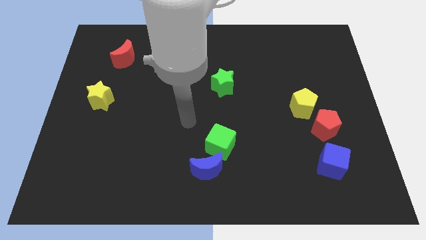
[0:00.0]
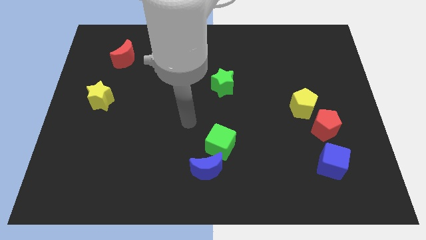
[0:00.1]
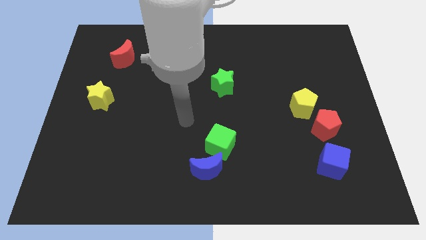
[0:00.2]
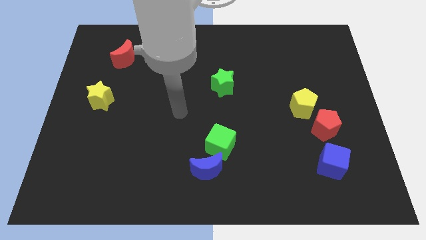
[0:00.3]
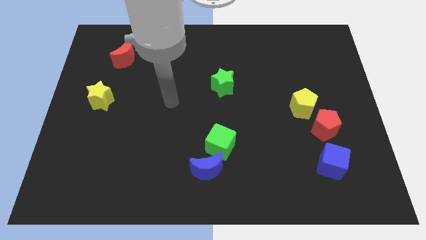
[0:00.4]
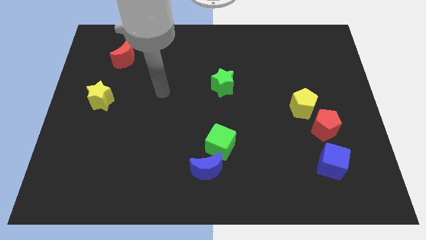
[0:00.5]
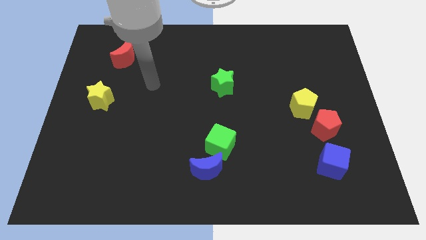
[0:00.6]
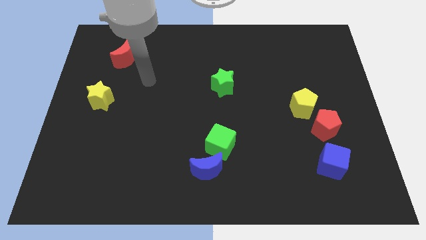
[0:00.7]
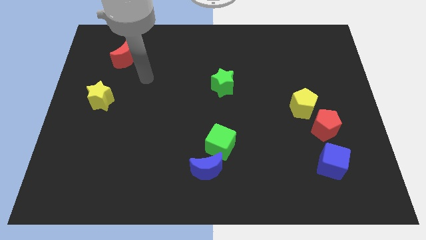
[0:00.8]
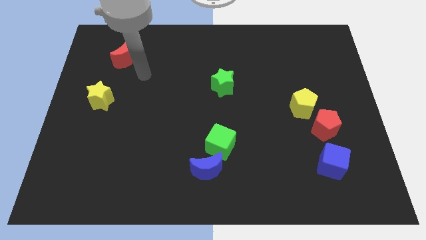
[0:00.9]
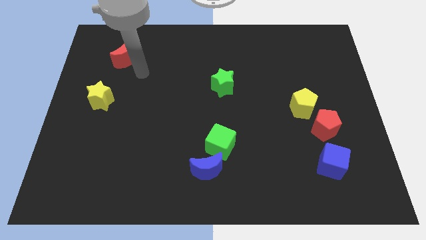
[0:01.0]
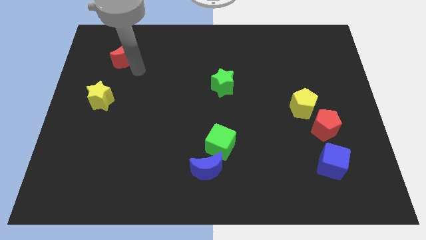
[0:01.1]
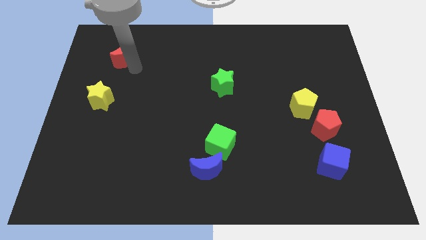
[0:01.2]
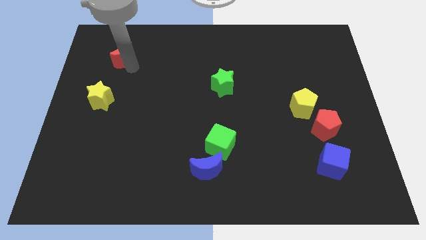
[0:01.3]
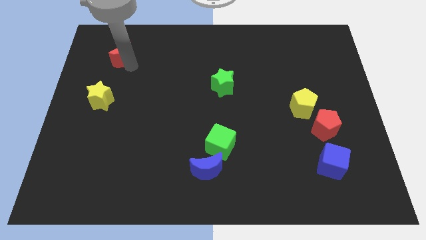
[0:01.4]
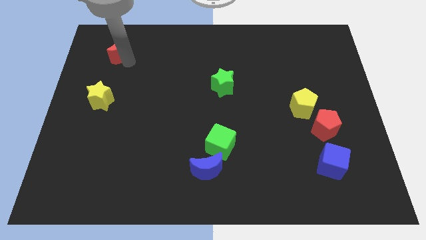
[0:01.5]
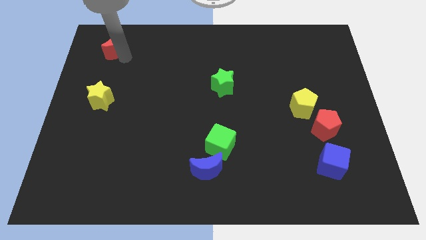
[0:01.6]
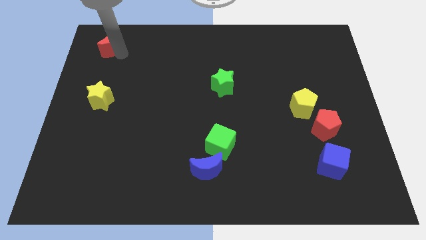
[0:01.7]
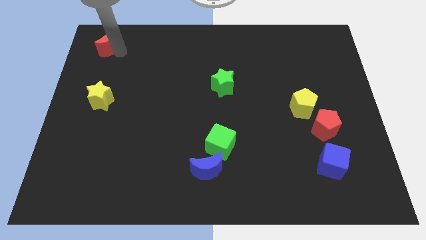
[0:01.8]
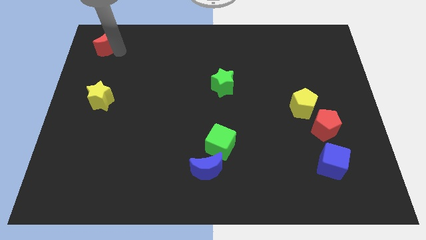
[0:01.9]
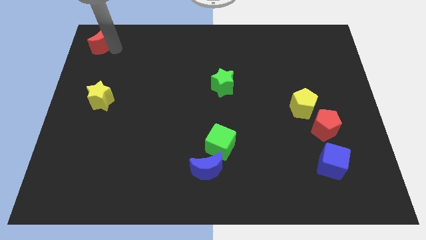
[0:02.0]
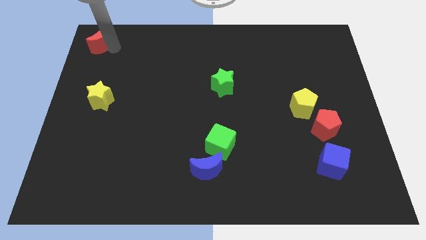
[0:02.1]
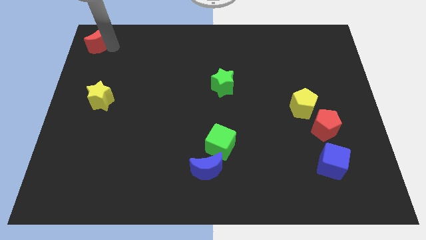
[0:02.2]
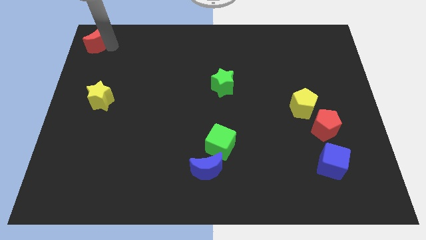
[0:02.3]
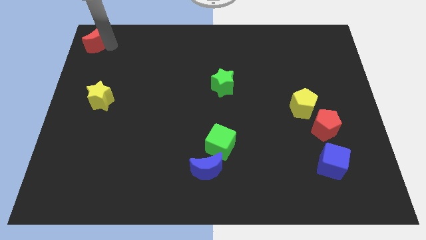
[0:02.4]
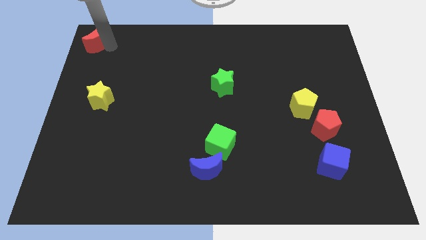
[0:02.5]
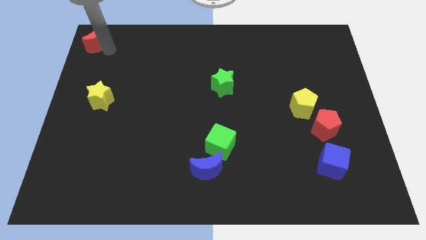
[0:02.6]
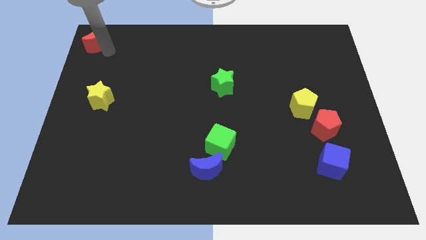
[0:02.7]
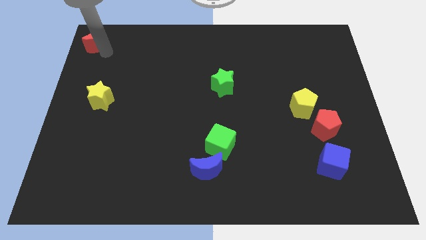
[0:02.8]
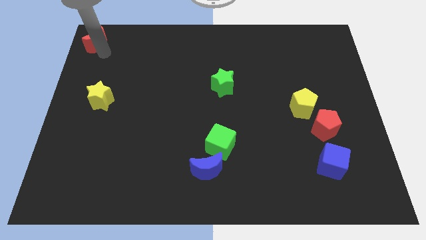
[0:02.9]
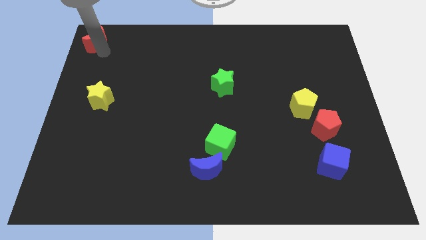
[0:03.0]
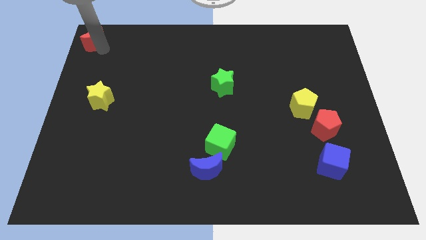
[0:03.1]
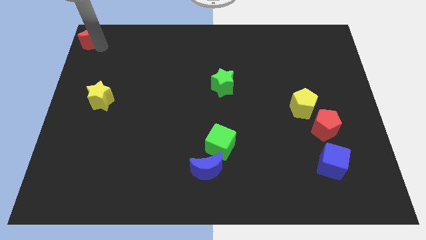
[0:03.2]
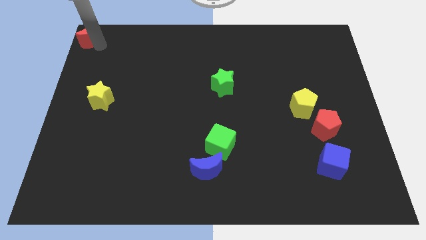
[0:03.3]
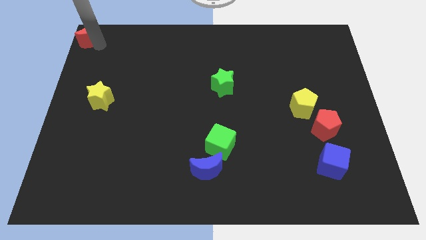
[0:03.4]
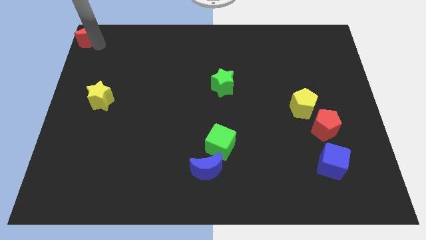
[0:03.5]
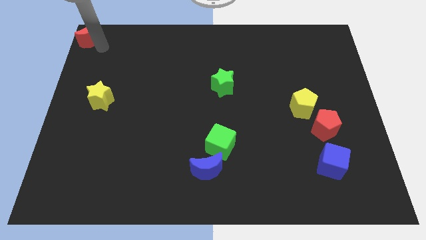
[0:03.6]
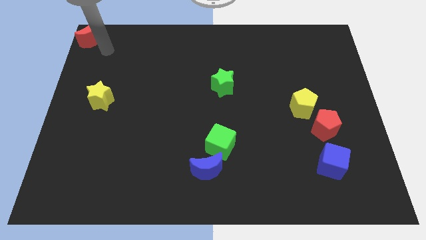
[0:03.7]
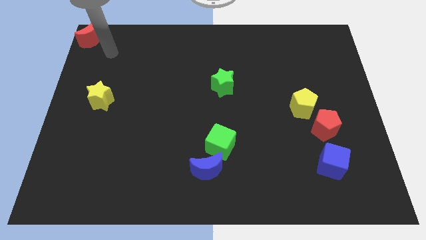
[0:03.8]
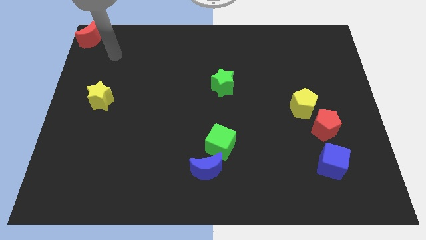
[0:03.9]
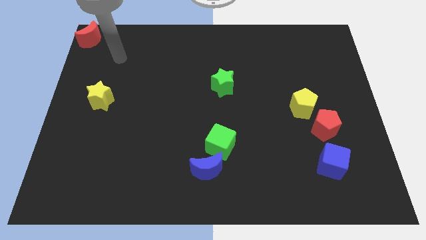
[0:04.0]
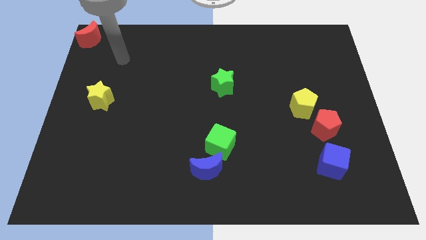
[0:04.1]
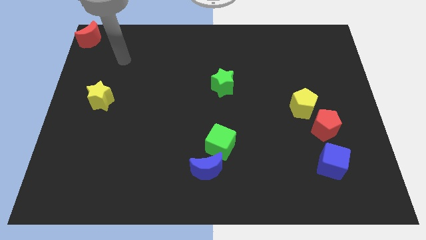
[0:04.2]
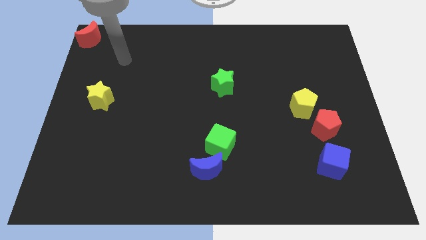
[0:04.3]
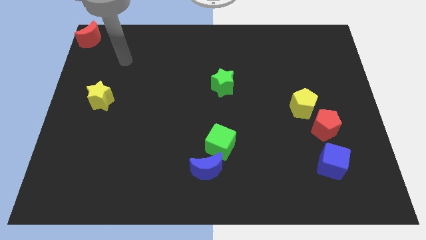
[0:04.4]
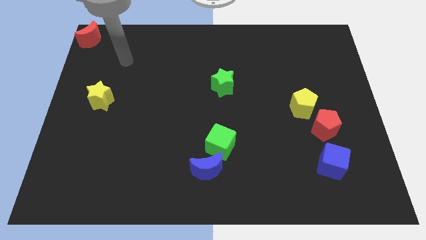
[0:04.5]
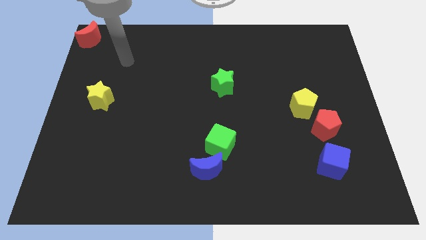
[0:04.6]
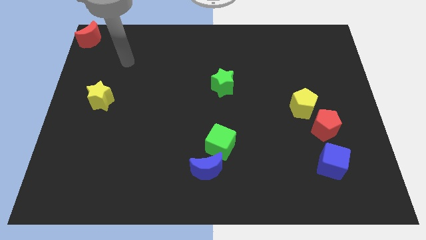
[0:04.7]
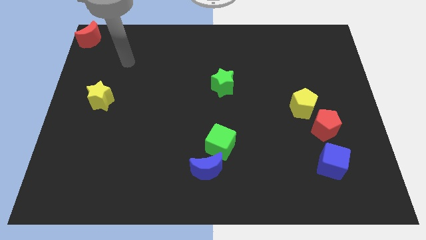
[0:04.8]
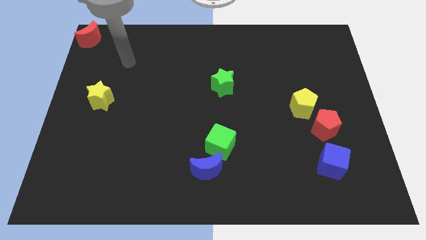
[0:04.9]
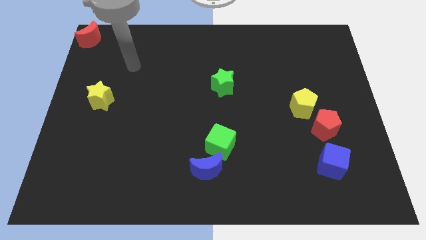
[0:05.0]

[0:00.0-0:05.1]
place the red moon at the top left side

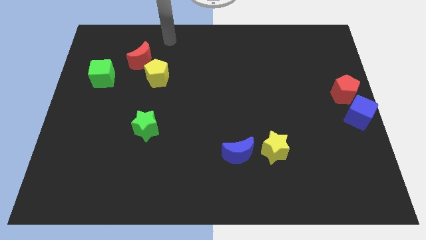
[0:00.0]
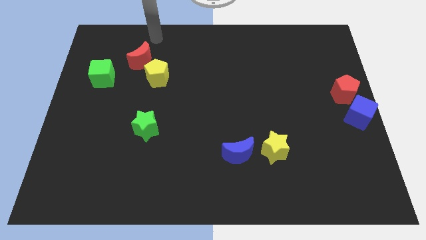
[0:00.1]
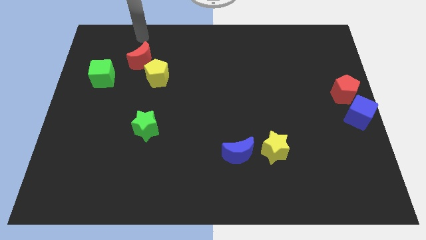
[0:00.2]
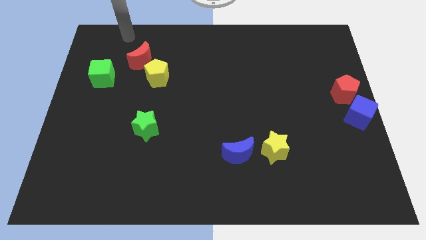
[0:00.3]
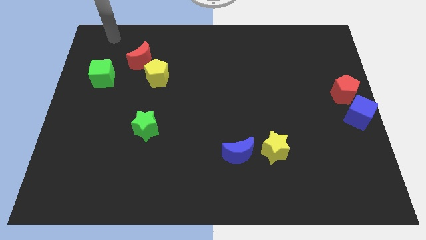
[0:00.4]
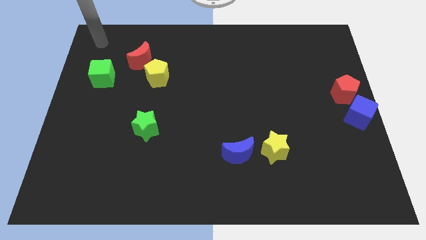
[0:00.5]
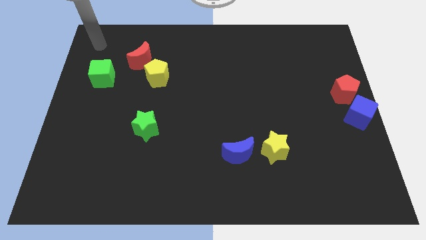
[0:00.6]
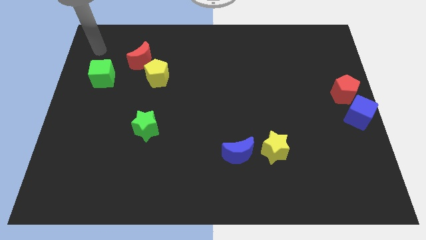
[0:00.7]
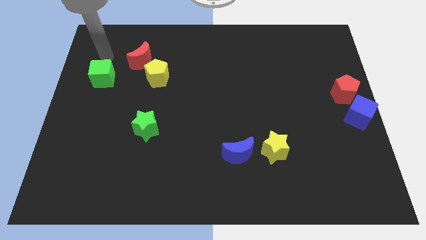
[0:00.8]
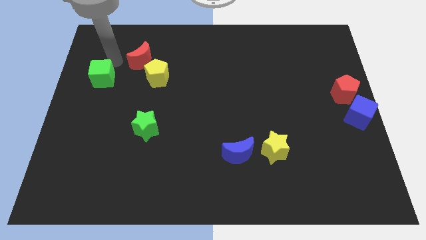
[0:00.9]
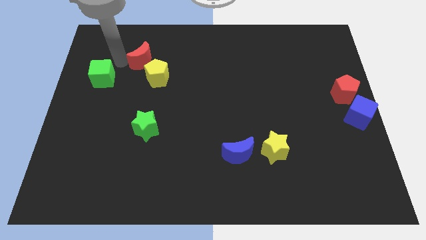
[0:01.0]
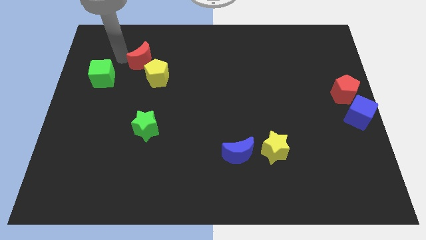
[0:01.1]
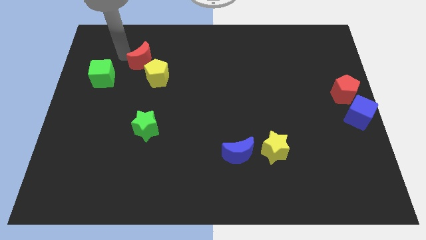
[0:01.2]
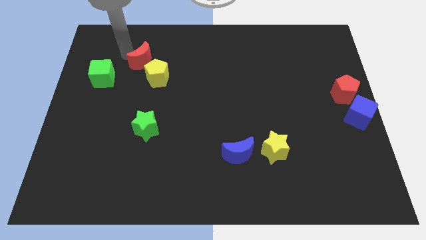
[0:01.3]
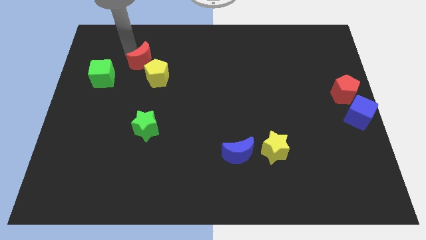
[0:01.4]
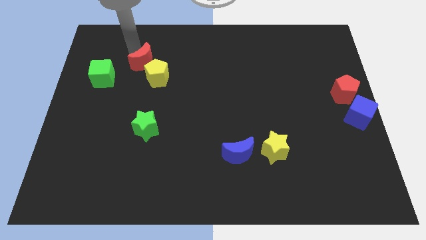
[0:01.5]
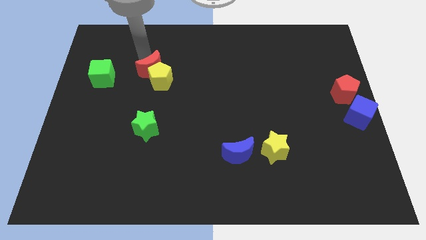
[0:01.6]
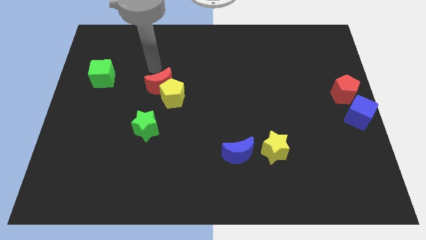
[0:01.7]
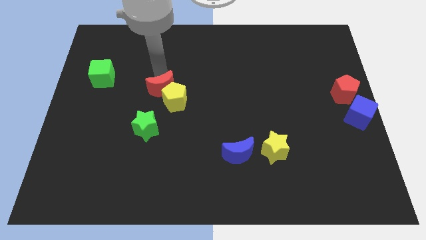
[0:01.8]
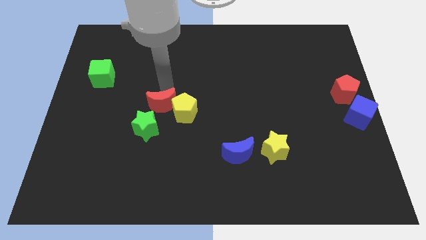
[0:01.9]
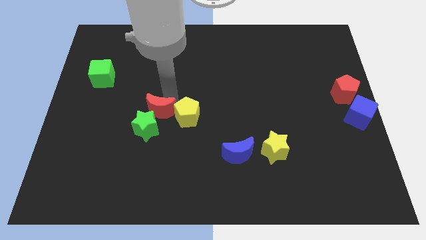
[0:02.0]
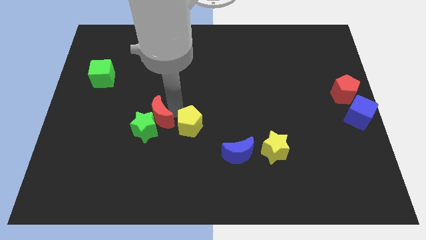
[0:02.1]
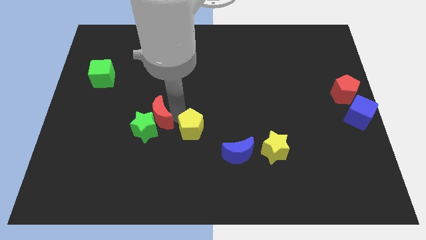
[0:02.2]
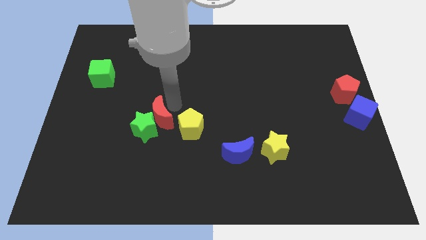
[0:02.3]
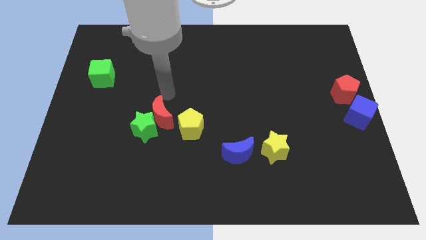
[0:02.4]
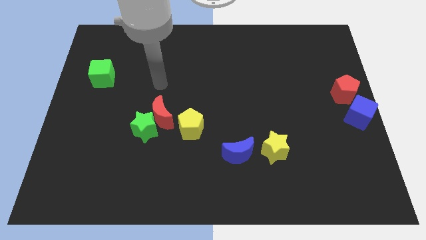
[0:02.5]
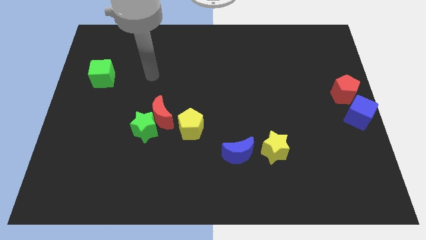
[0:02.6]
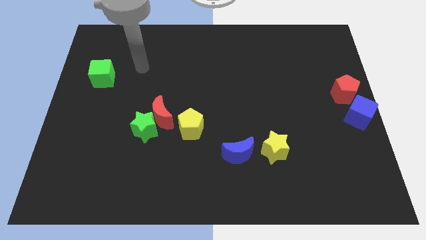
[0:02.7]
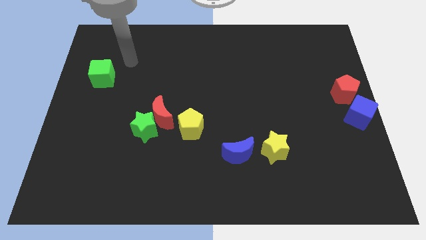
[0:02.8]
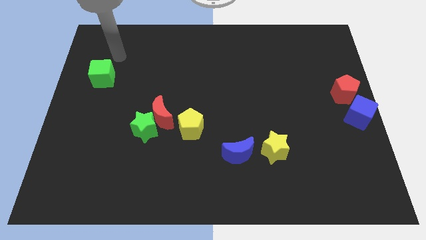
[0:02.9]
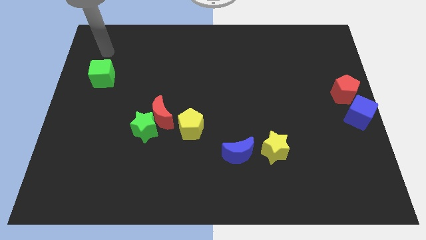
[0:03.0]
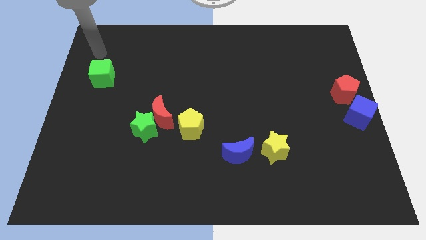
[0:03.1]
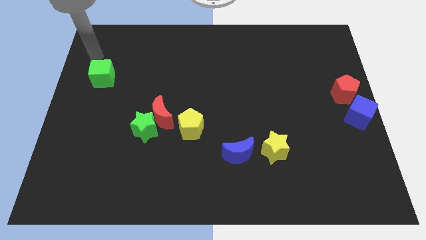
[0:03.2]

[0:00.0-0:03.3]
move your arm away from the red moon and the yellow pentagon

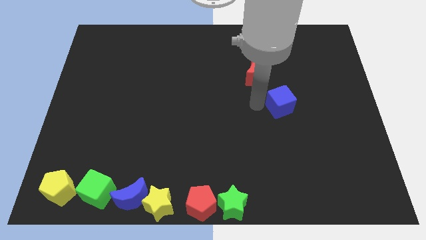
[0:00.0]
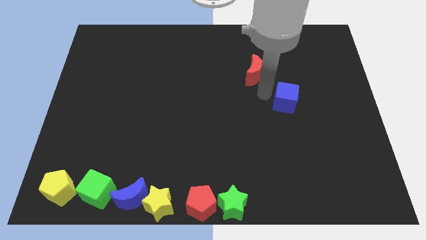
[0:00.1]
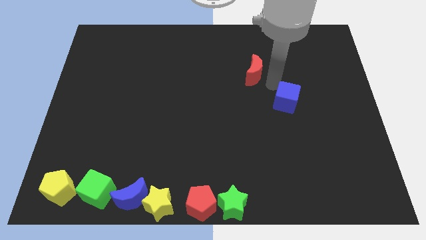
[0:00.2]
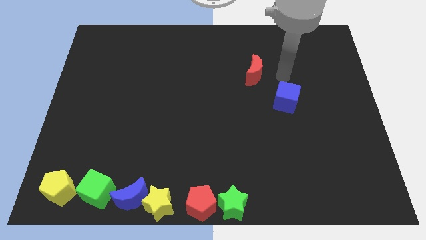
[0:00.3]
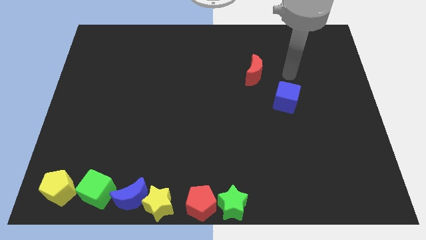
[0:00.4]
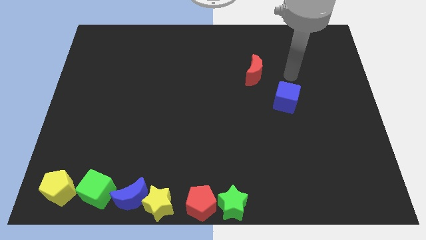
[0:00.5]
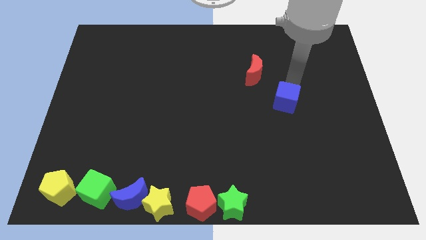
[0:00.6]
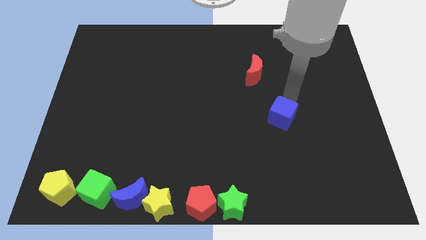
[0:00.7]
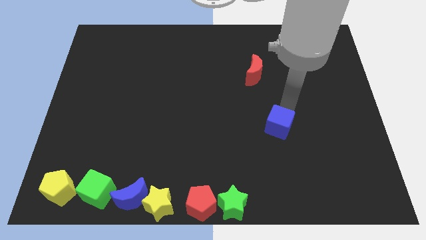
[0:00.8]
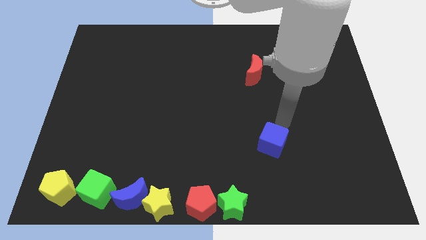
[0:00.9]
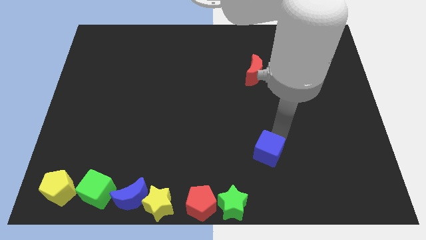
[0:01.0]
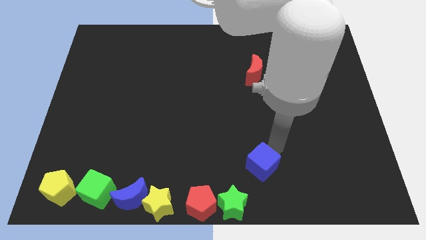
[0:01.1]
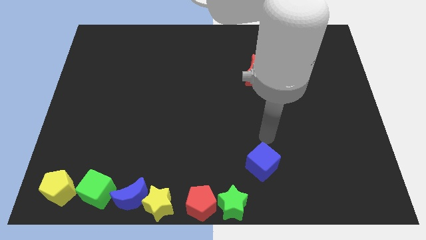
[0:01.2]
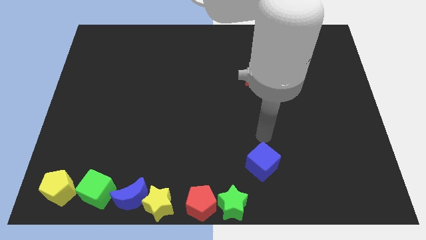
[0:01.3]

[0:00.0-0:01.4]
push the blue cube towards the top right of the green star
